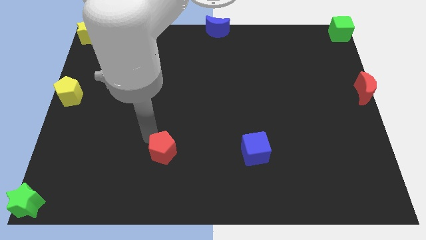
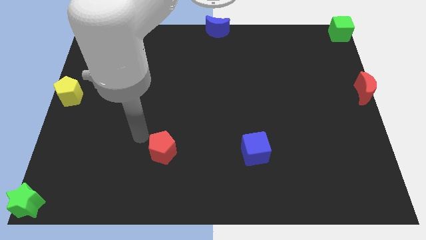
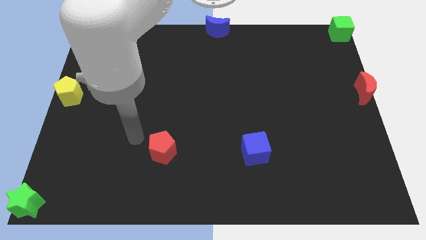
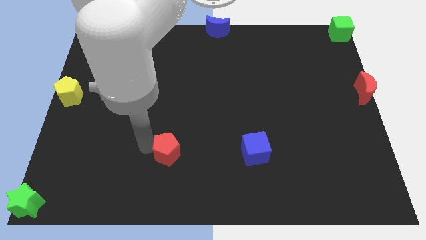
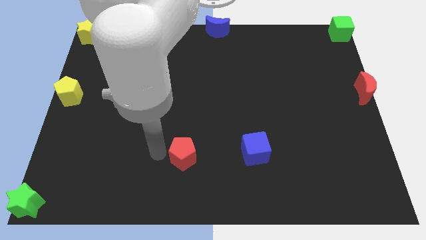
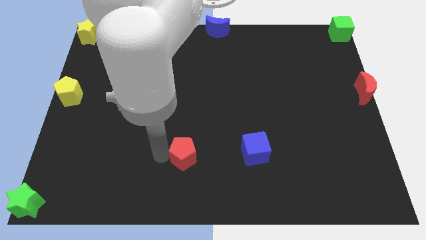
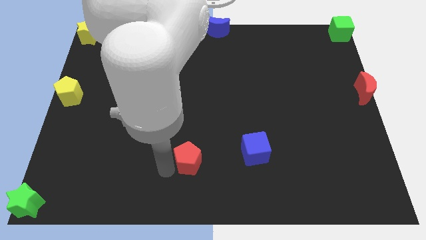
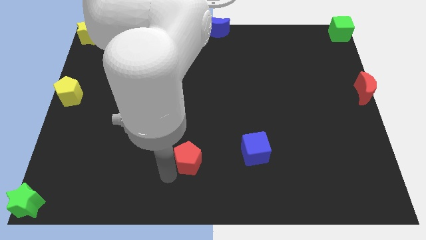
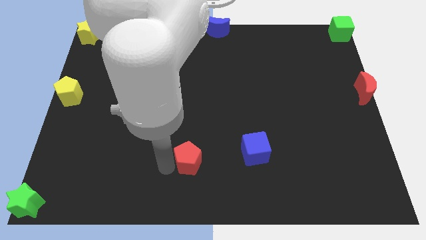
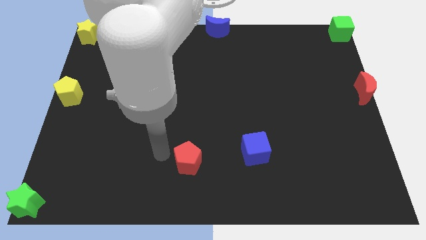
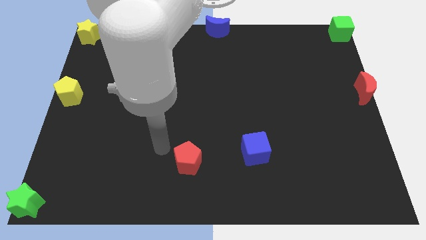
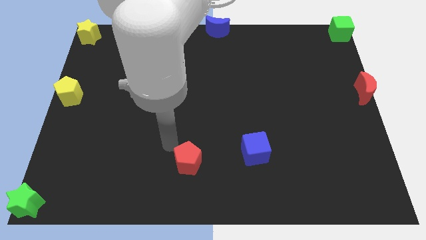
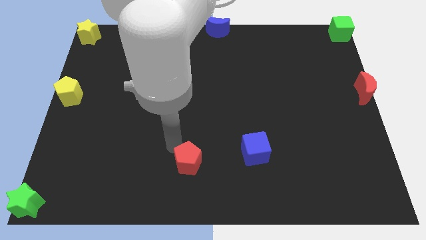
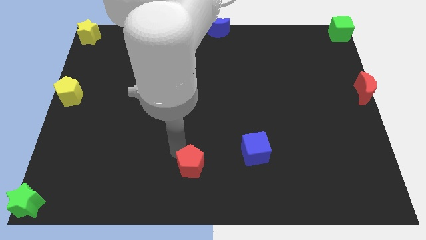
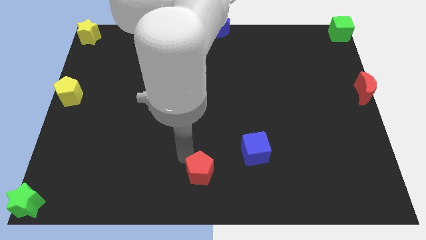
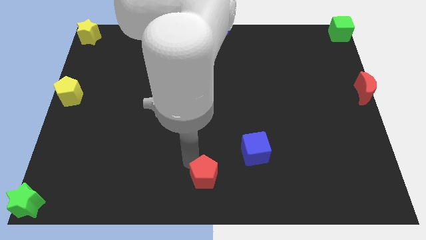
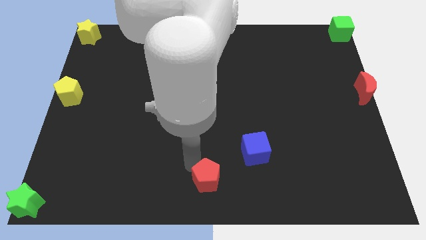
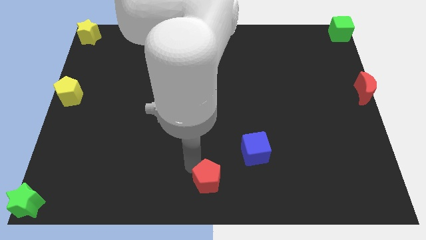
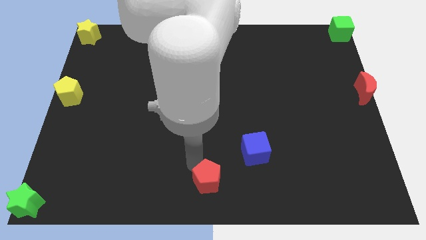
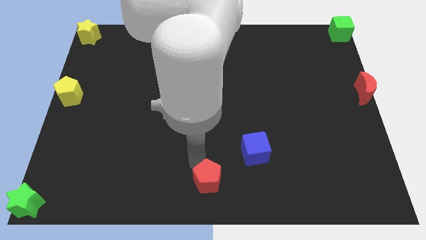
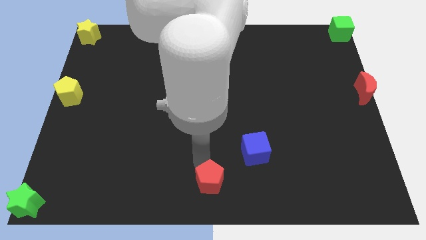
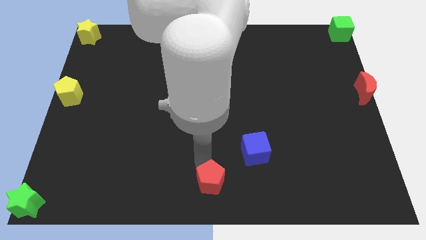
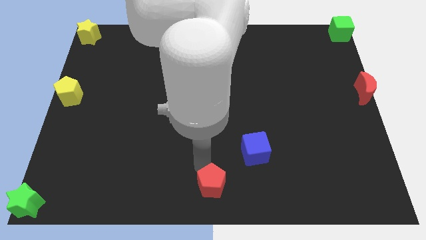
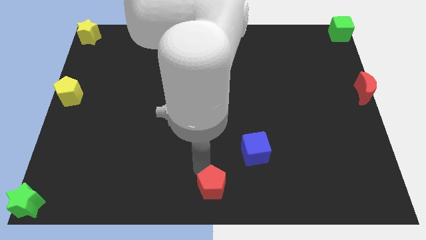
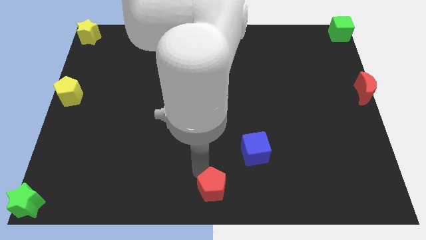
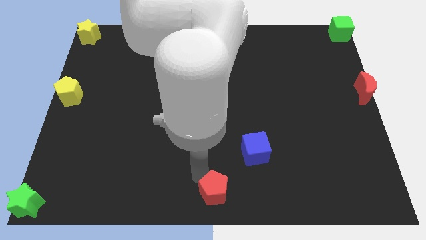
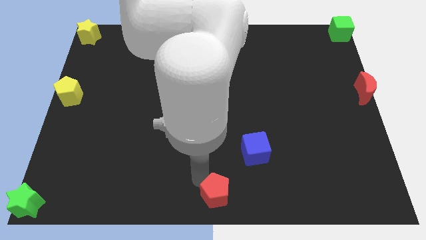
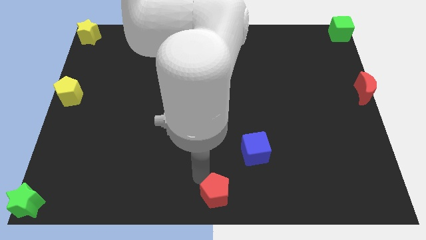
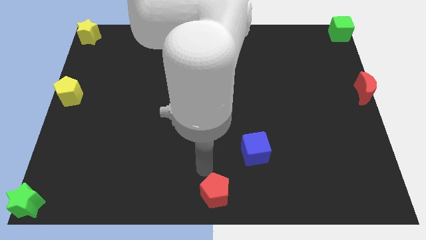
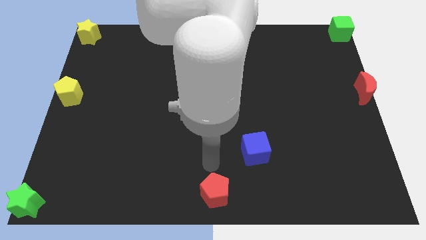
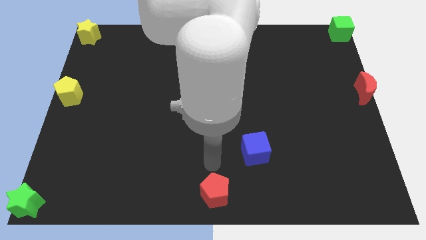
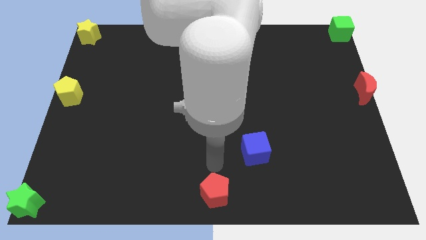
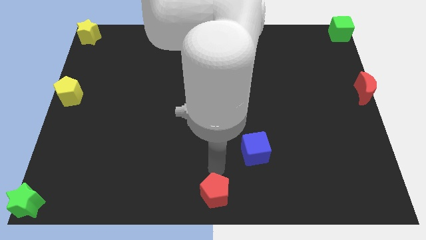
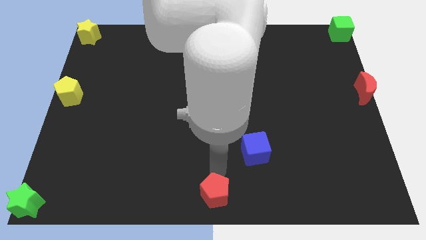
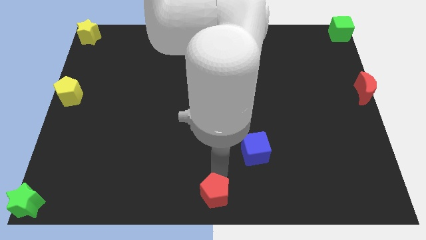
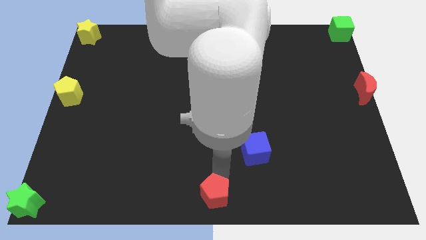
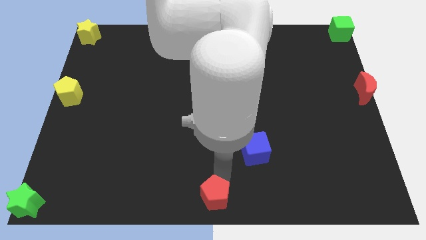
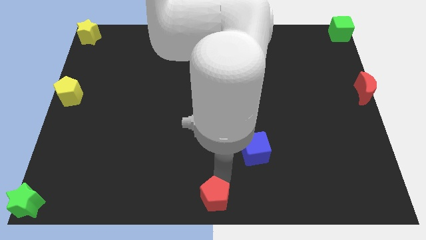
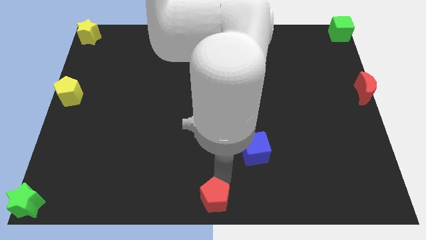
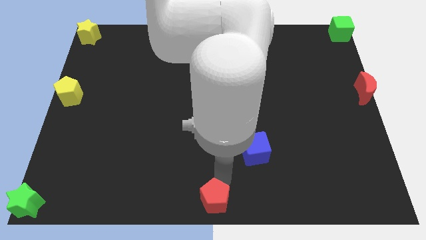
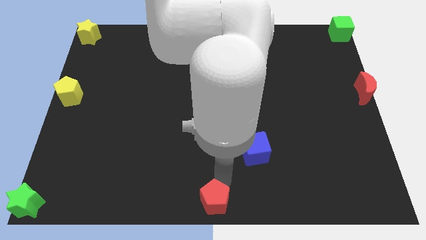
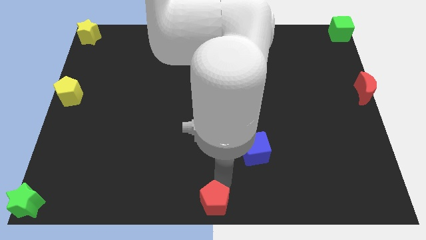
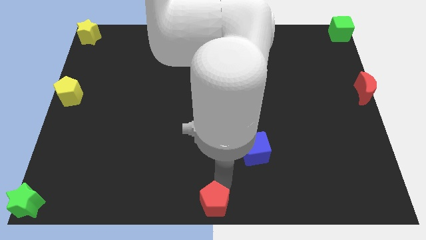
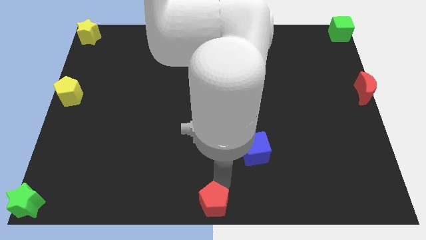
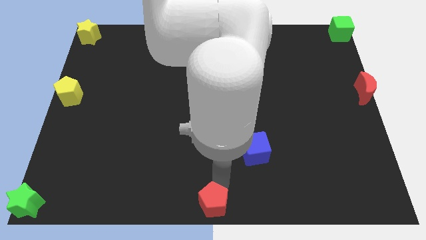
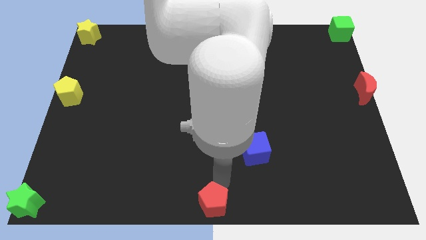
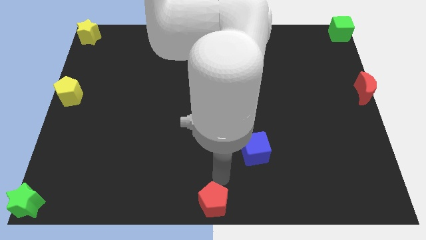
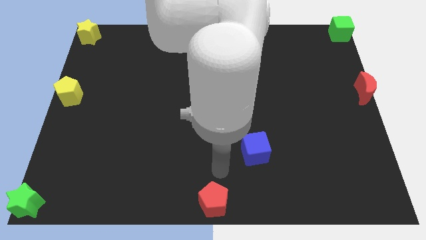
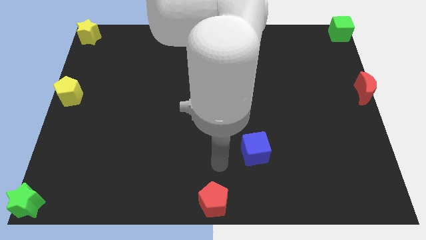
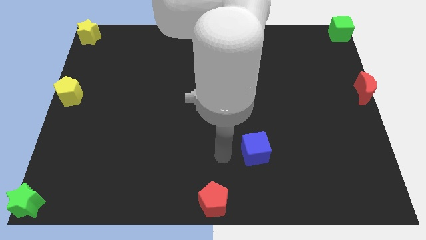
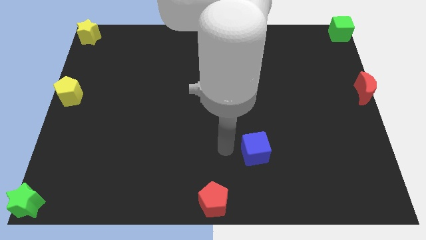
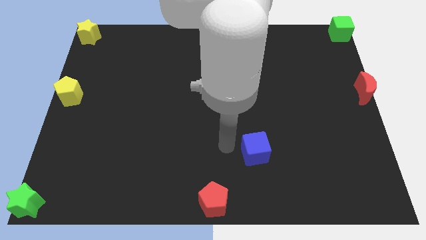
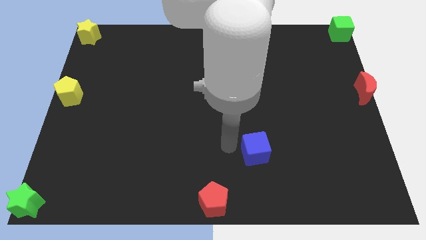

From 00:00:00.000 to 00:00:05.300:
place red pentagon at bottom center

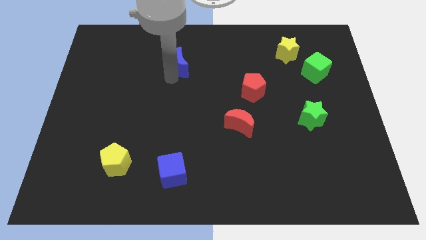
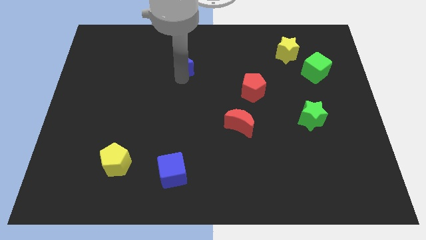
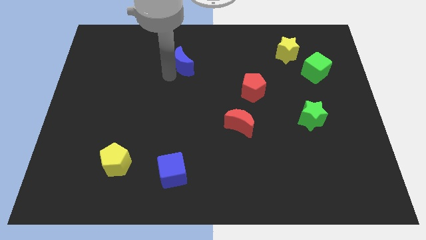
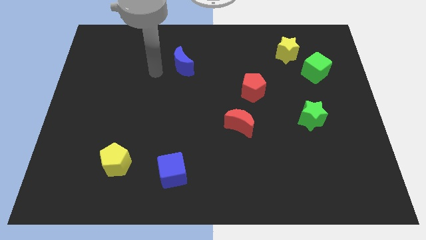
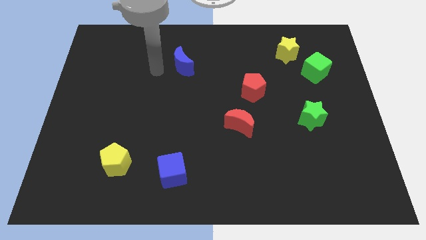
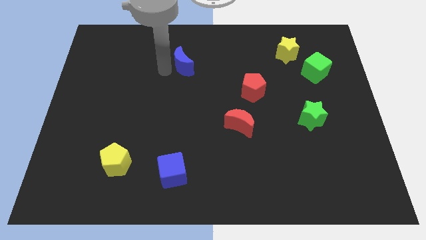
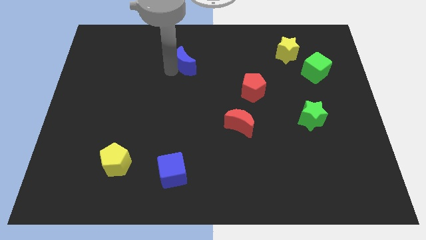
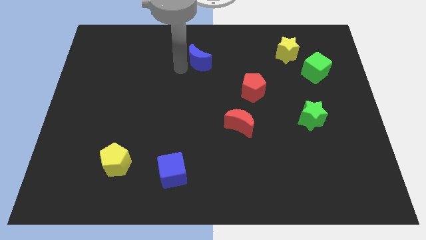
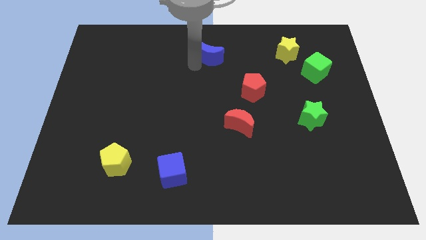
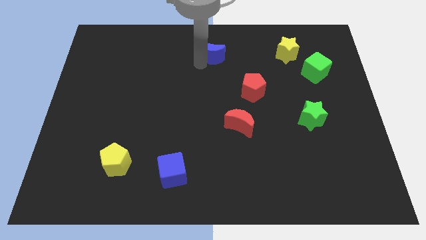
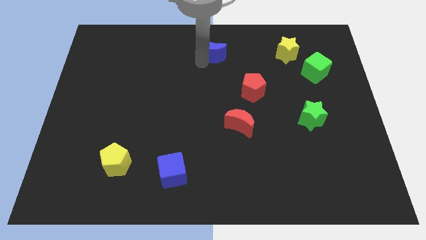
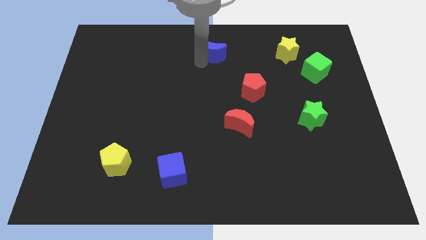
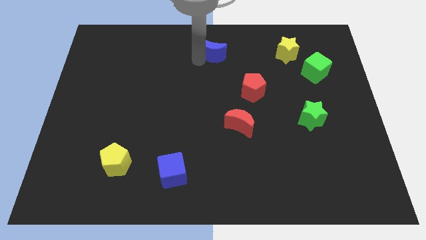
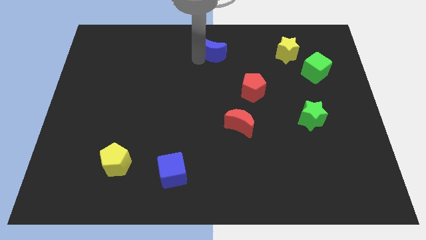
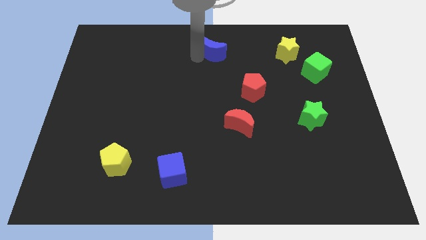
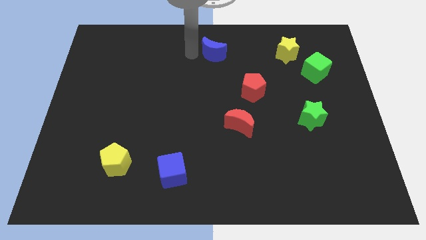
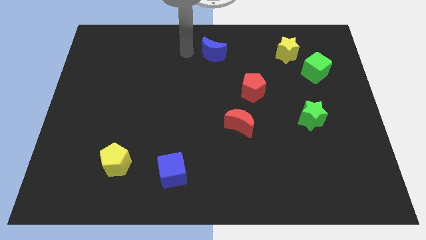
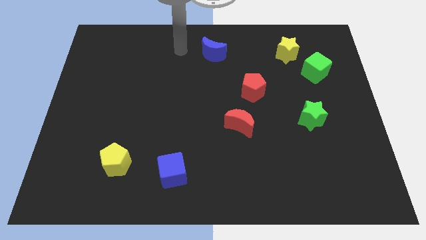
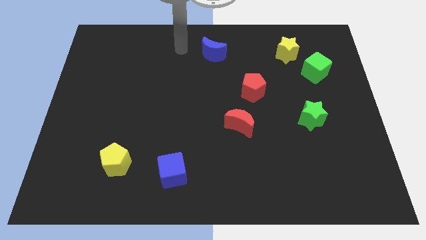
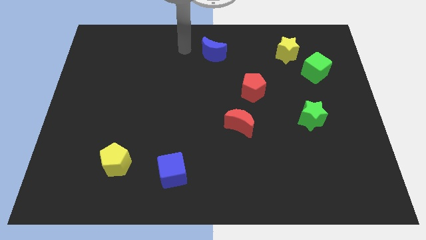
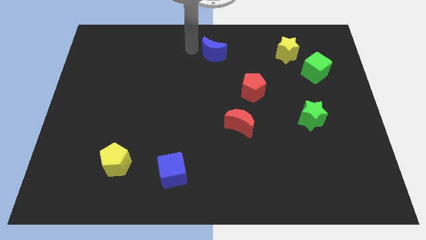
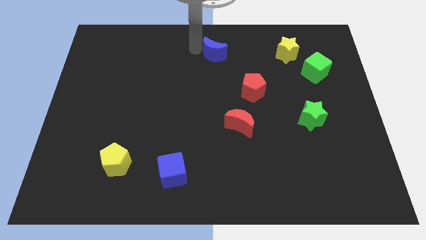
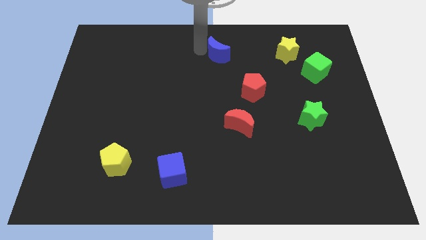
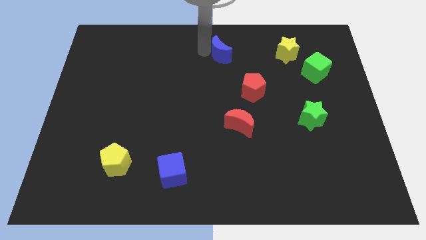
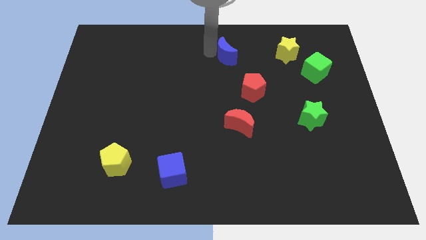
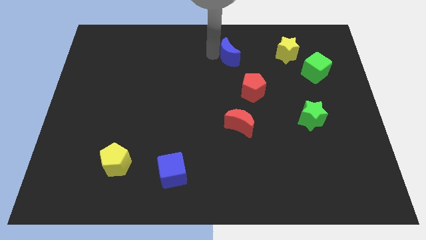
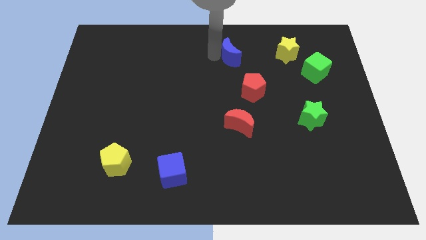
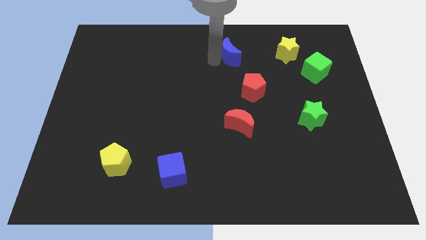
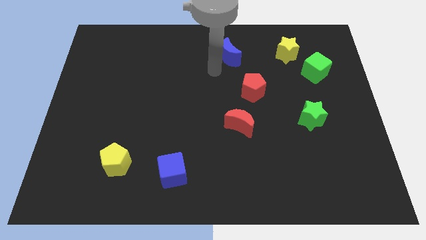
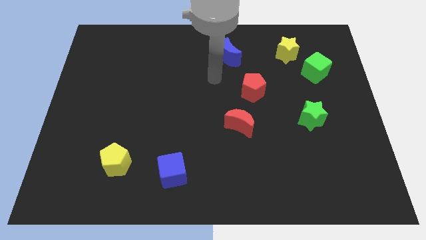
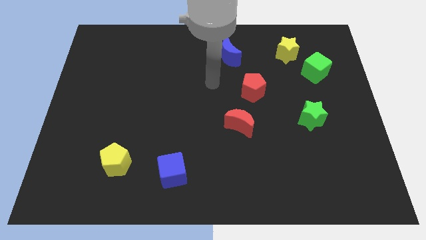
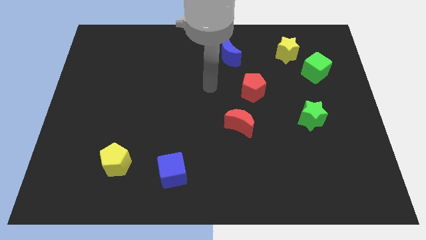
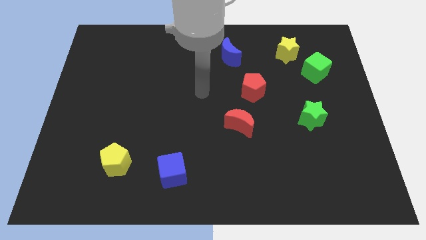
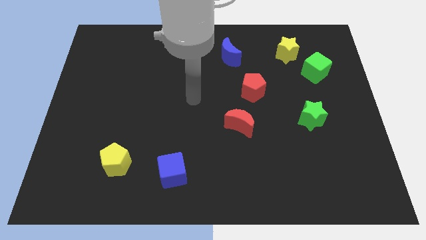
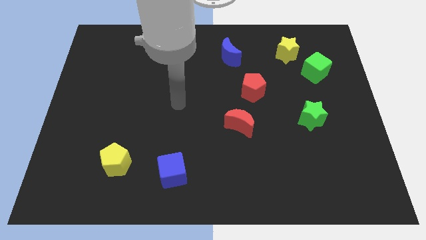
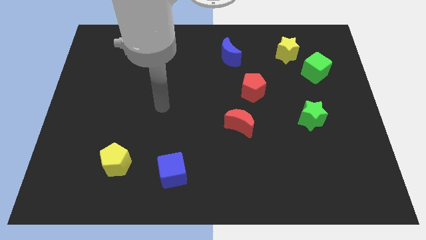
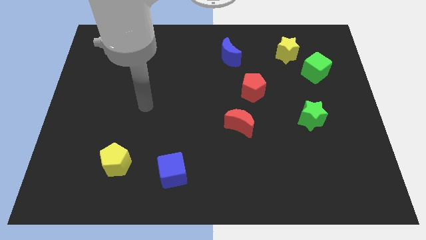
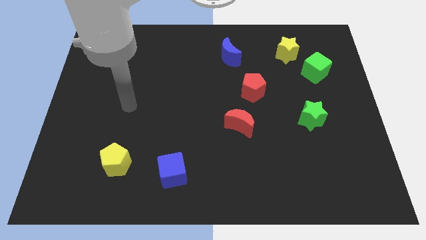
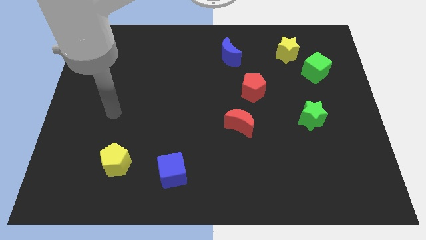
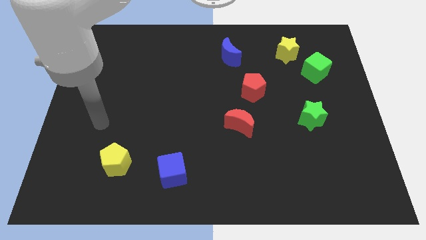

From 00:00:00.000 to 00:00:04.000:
put the blue moon vertically above the red crescent
